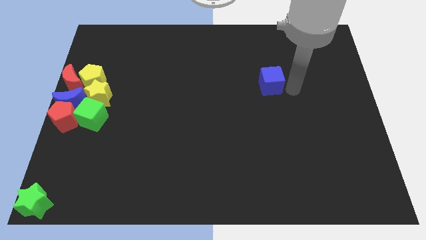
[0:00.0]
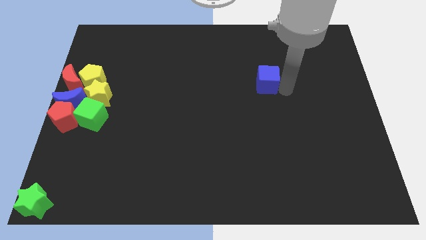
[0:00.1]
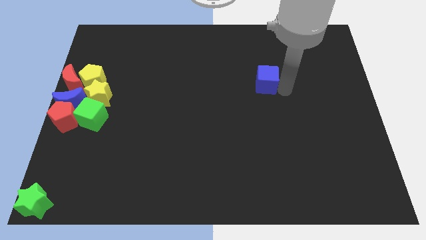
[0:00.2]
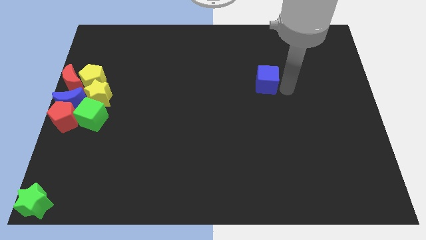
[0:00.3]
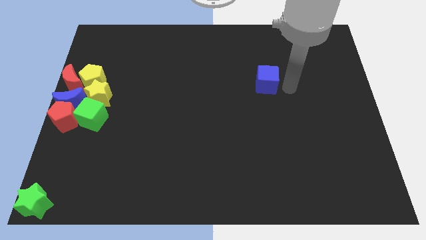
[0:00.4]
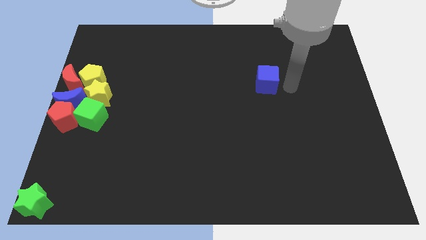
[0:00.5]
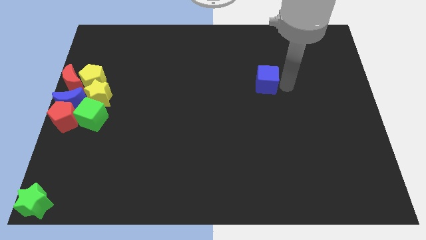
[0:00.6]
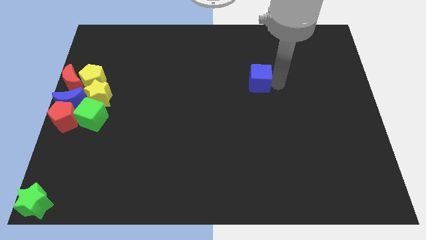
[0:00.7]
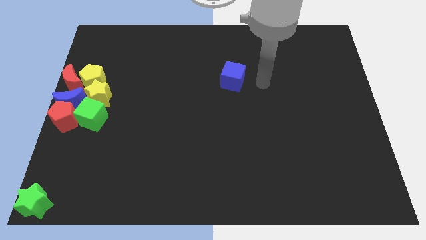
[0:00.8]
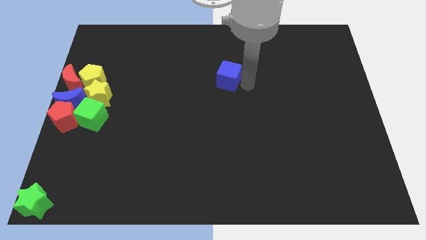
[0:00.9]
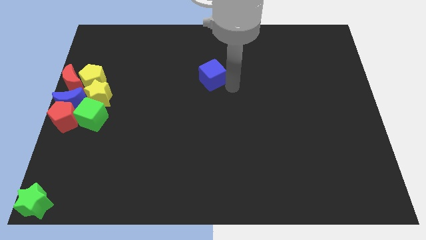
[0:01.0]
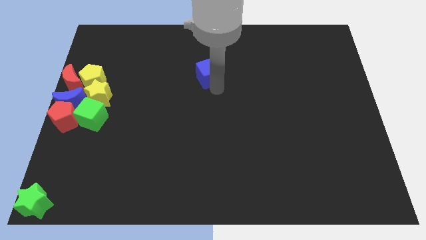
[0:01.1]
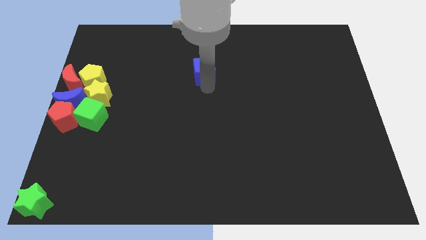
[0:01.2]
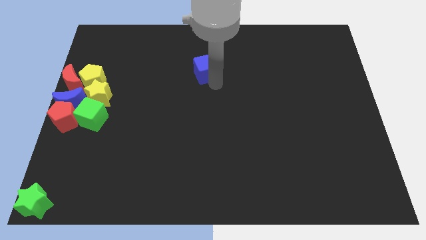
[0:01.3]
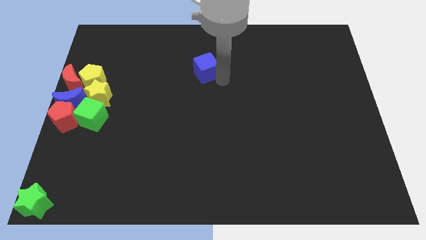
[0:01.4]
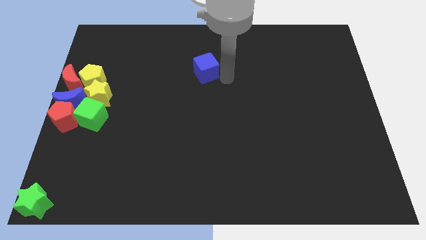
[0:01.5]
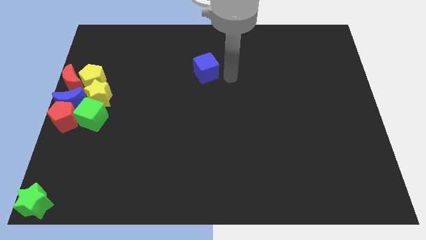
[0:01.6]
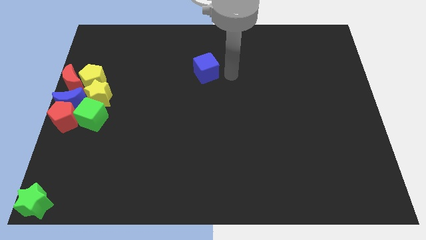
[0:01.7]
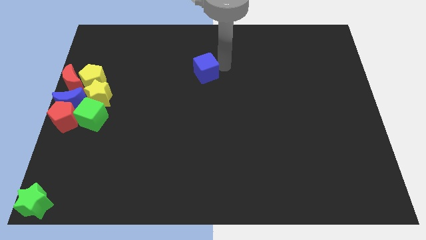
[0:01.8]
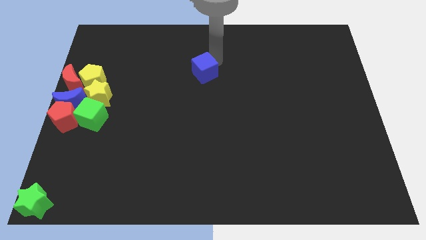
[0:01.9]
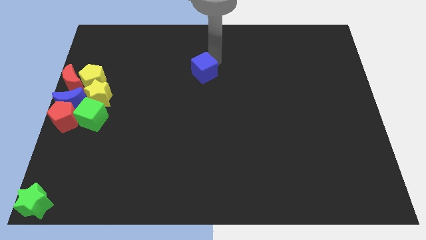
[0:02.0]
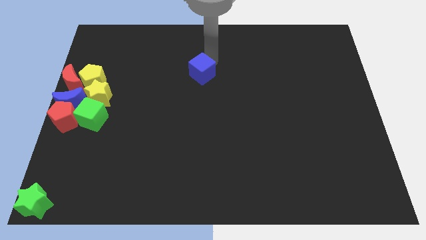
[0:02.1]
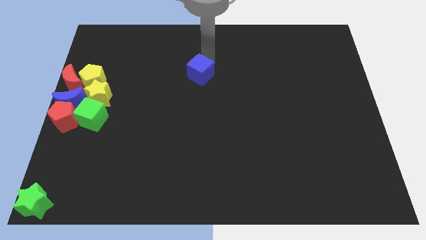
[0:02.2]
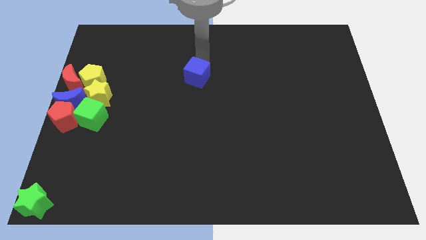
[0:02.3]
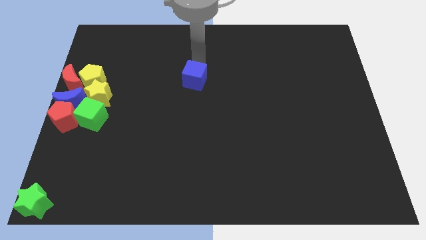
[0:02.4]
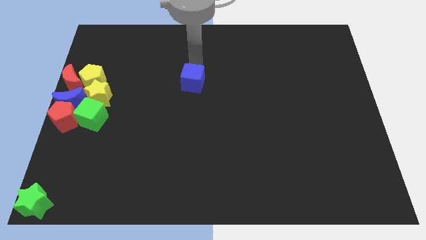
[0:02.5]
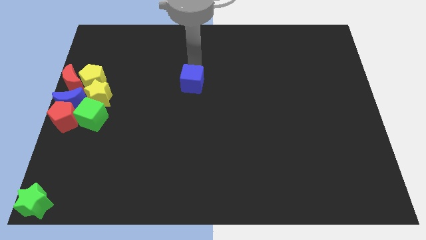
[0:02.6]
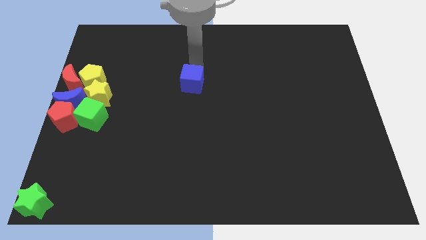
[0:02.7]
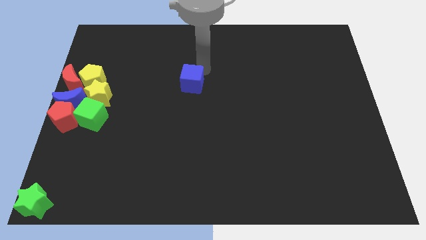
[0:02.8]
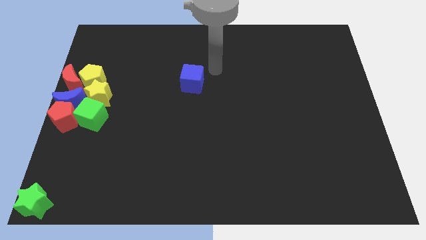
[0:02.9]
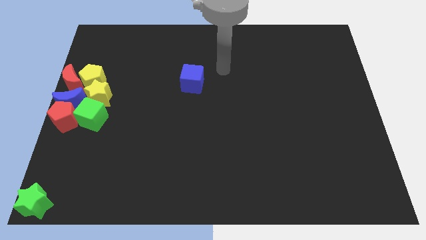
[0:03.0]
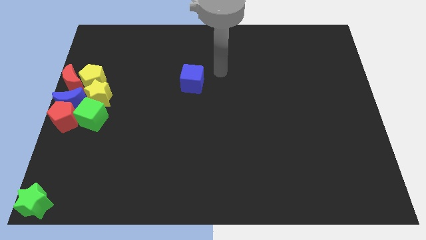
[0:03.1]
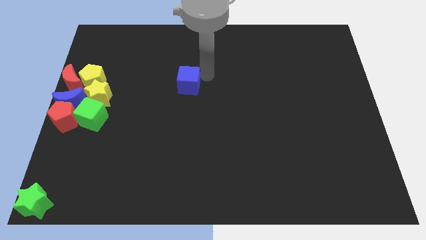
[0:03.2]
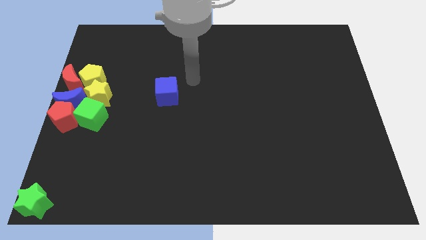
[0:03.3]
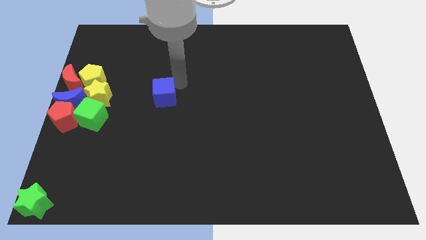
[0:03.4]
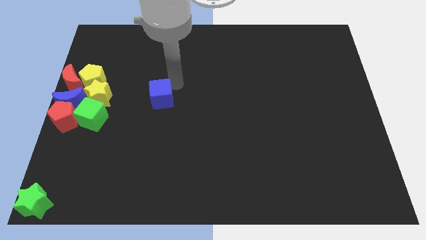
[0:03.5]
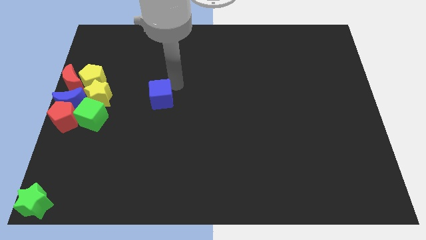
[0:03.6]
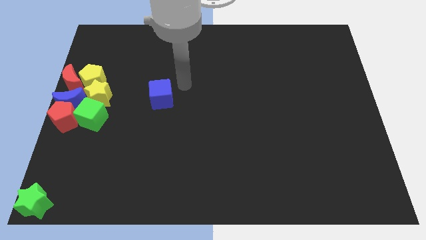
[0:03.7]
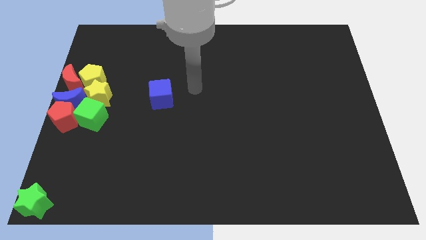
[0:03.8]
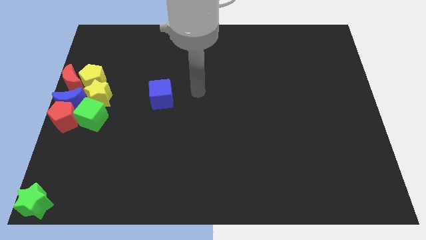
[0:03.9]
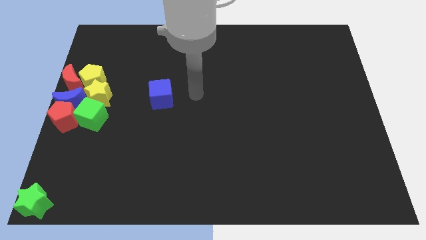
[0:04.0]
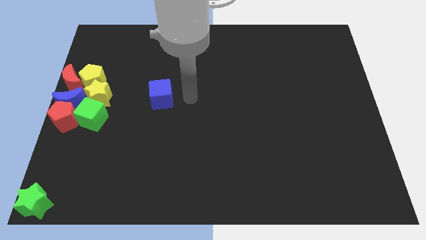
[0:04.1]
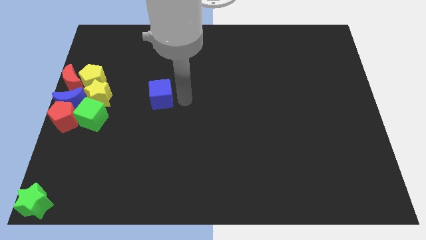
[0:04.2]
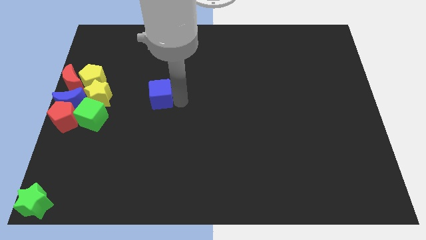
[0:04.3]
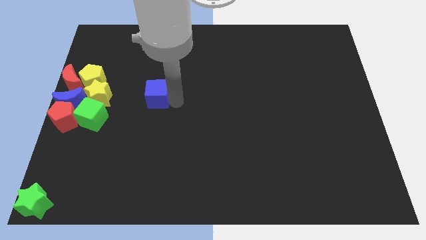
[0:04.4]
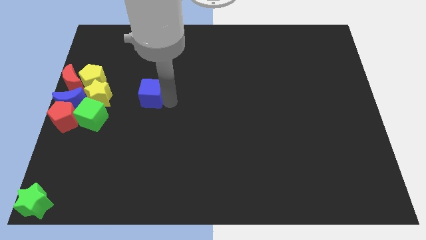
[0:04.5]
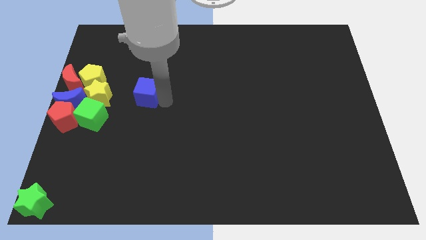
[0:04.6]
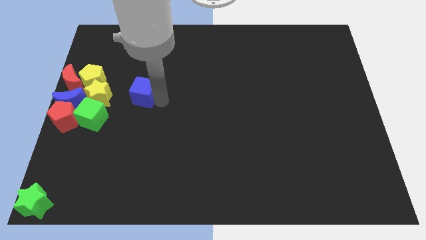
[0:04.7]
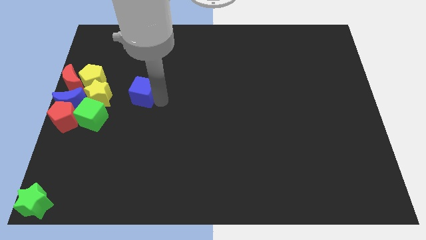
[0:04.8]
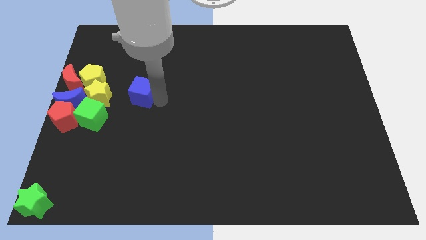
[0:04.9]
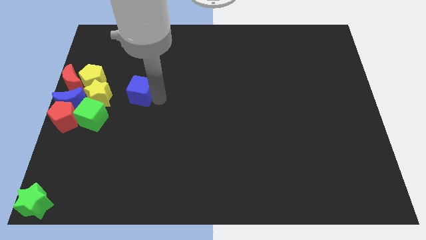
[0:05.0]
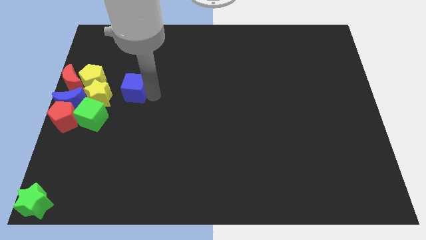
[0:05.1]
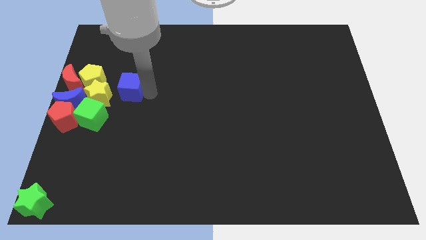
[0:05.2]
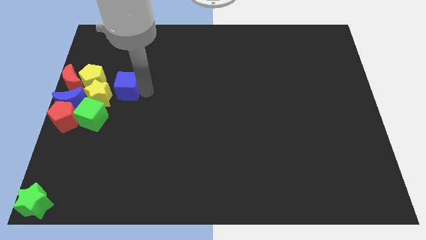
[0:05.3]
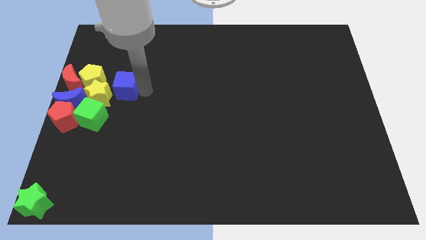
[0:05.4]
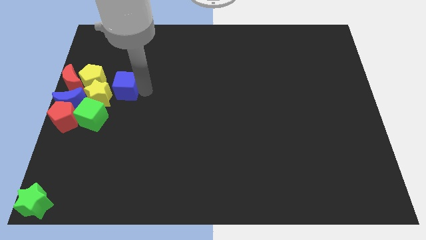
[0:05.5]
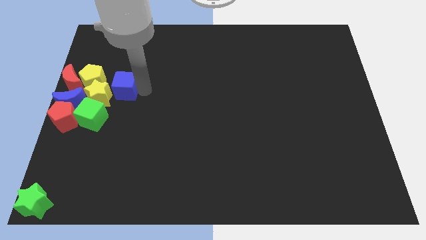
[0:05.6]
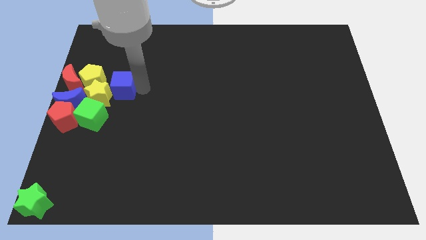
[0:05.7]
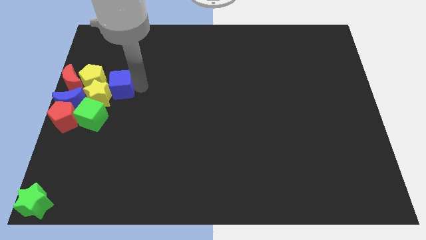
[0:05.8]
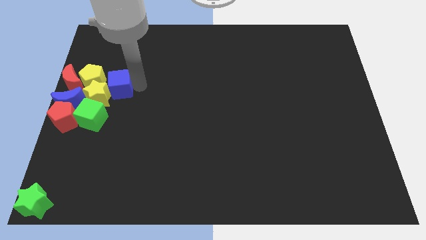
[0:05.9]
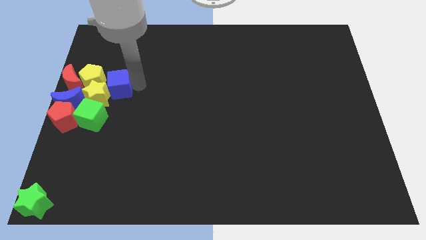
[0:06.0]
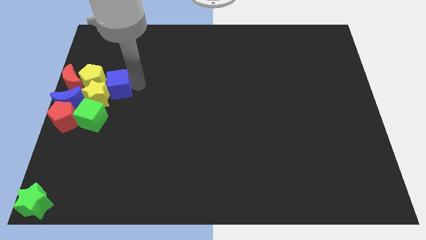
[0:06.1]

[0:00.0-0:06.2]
push the blue cube into yellow blocks

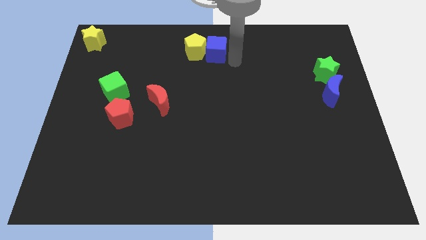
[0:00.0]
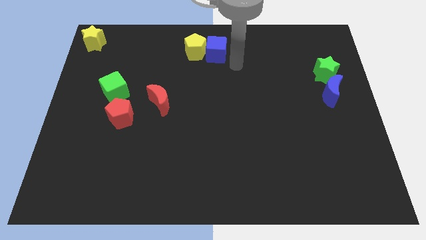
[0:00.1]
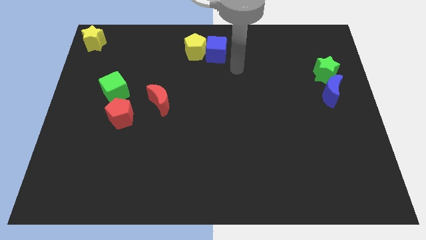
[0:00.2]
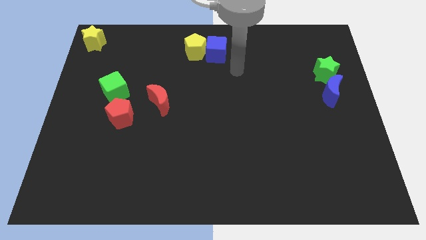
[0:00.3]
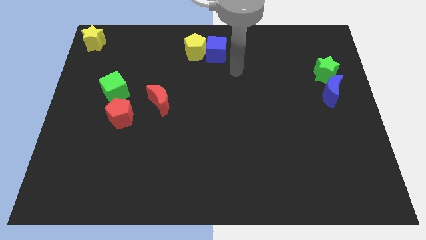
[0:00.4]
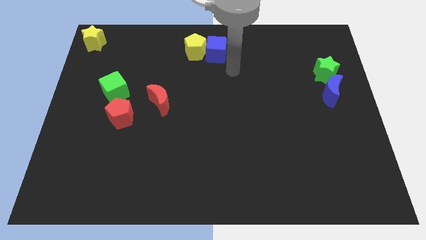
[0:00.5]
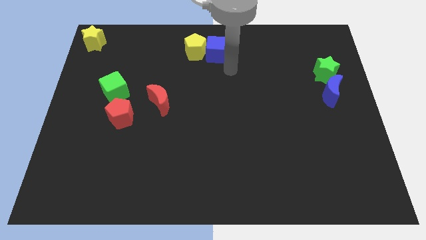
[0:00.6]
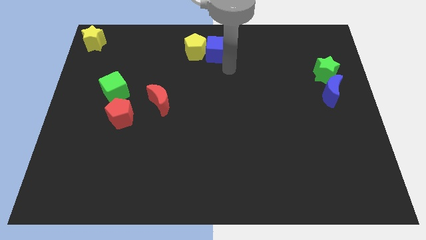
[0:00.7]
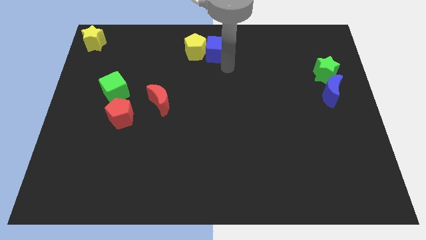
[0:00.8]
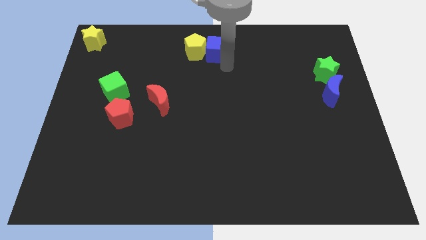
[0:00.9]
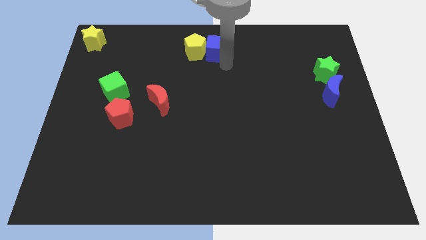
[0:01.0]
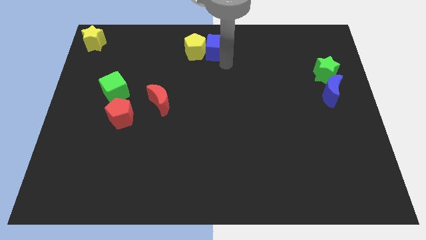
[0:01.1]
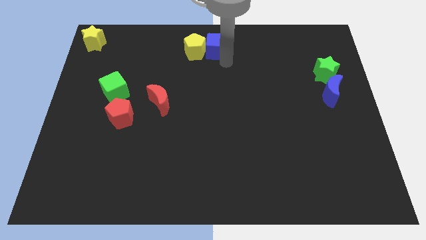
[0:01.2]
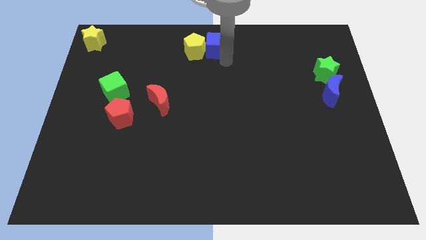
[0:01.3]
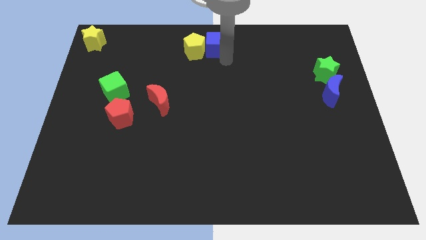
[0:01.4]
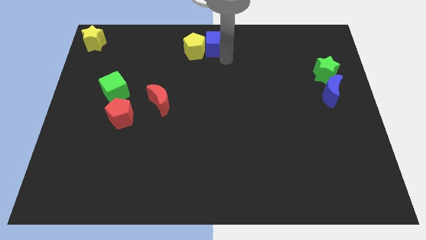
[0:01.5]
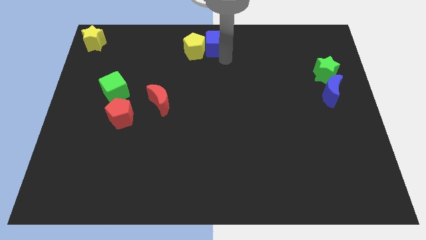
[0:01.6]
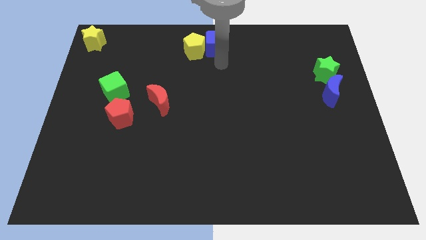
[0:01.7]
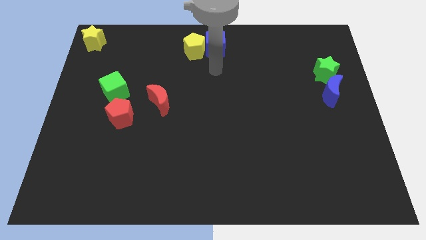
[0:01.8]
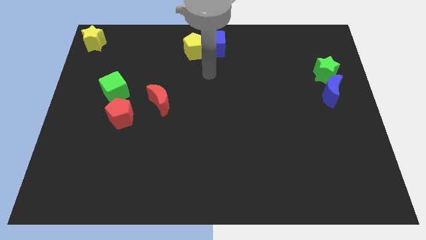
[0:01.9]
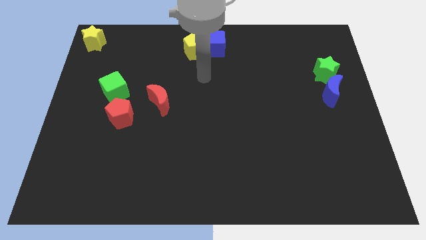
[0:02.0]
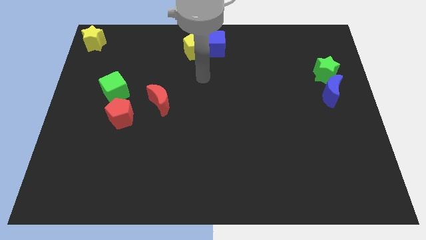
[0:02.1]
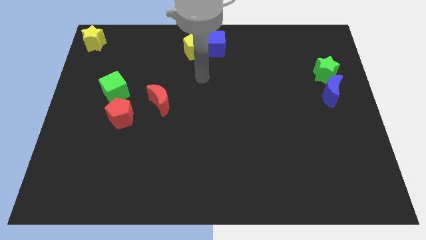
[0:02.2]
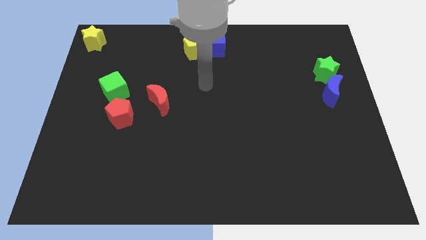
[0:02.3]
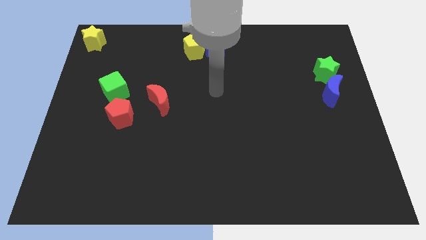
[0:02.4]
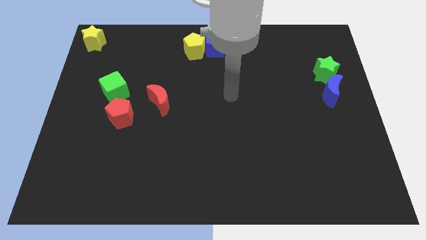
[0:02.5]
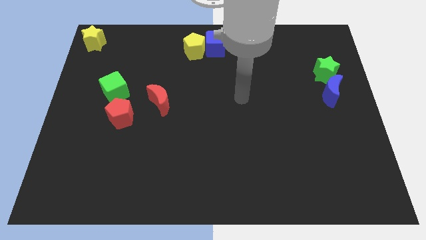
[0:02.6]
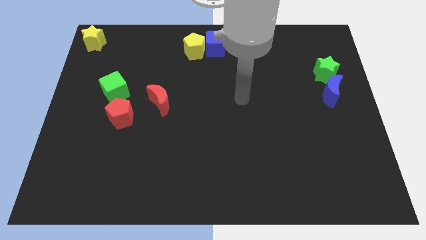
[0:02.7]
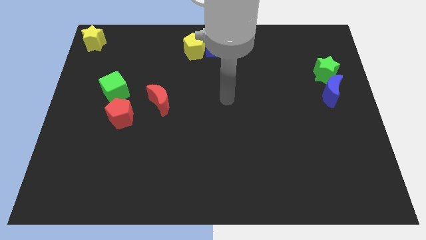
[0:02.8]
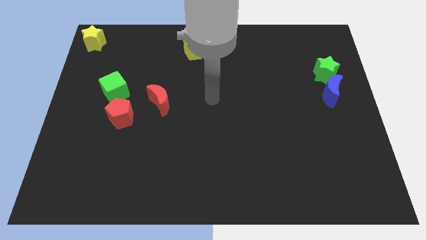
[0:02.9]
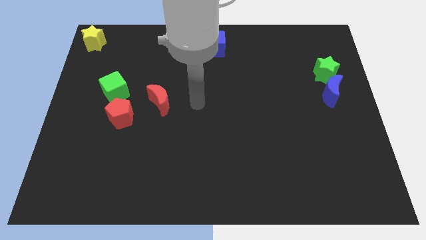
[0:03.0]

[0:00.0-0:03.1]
slightly push blue cube upwards to the top of the board
